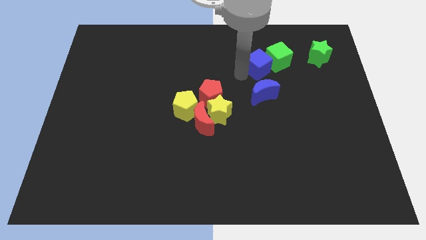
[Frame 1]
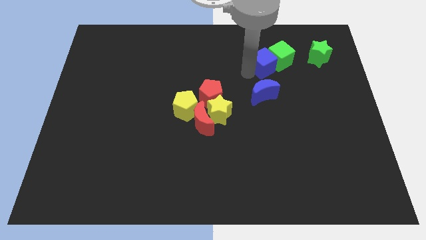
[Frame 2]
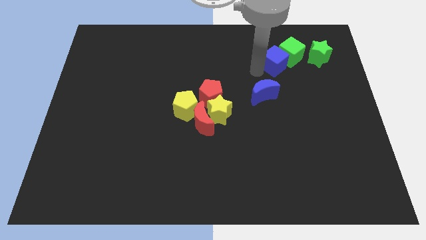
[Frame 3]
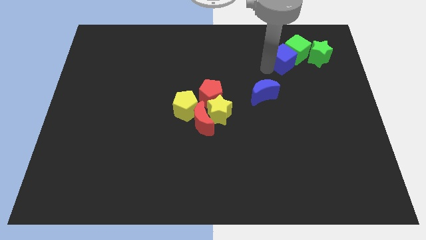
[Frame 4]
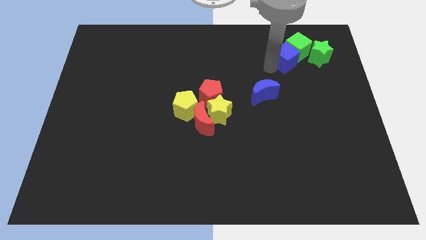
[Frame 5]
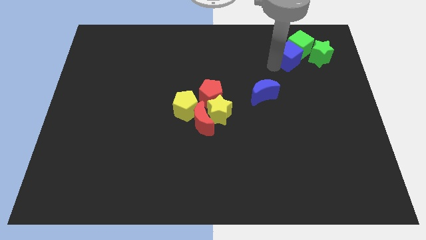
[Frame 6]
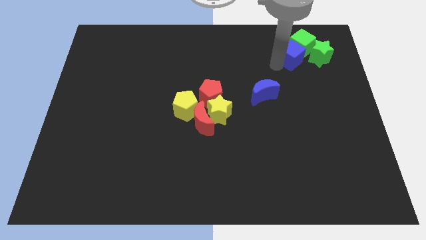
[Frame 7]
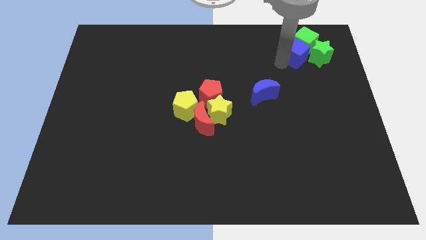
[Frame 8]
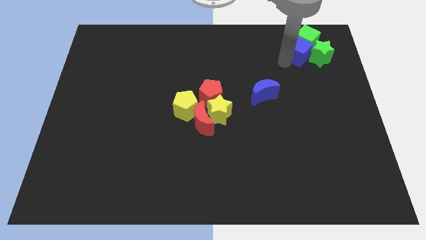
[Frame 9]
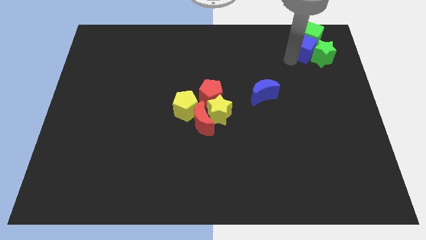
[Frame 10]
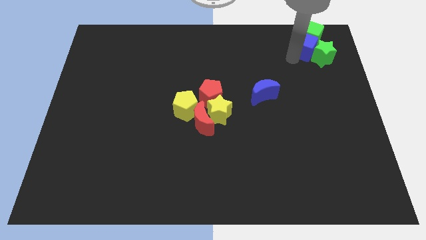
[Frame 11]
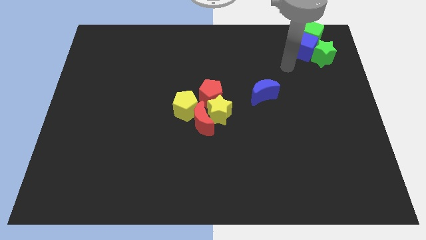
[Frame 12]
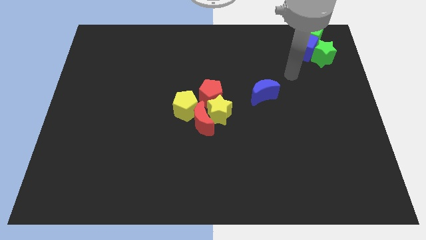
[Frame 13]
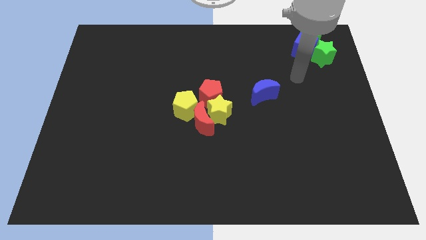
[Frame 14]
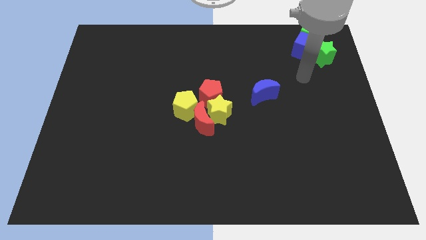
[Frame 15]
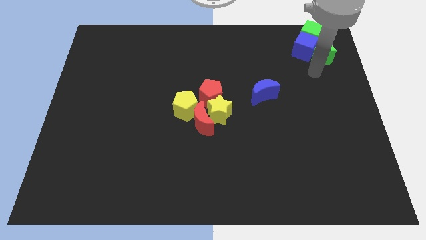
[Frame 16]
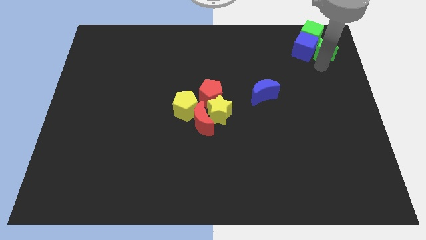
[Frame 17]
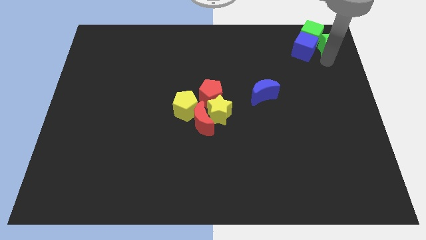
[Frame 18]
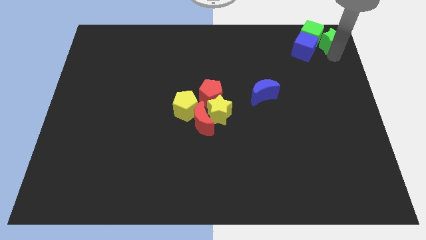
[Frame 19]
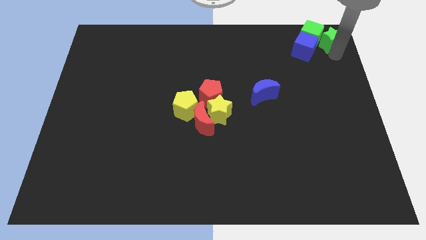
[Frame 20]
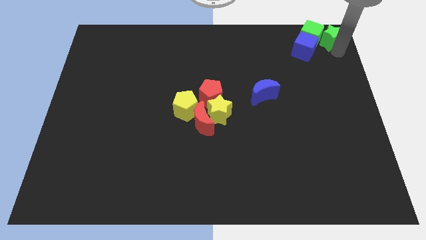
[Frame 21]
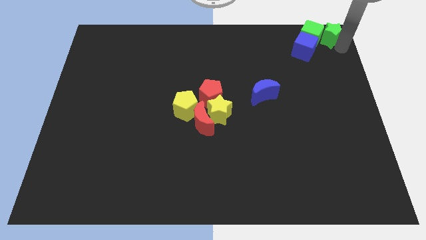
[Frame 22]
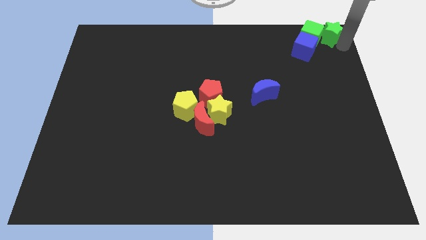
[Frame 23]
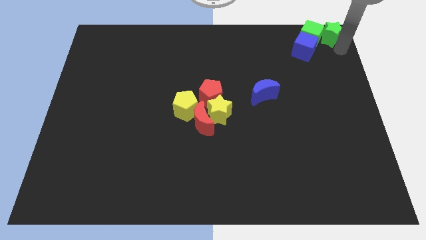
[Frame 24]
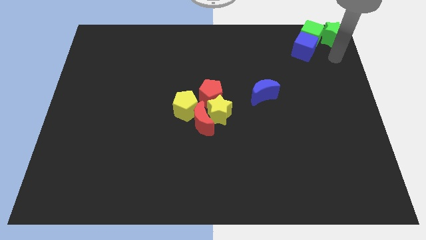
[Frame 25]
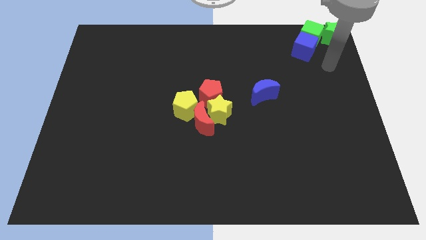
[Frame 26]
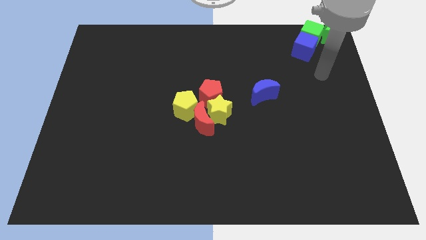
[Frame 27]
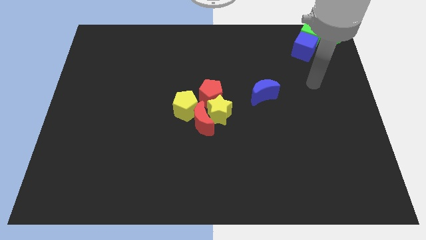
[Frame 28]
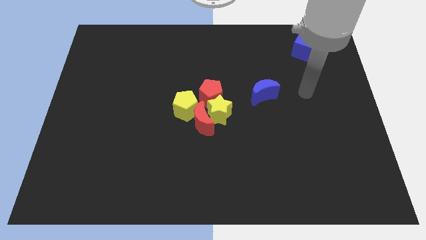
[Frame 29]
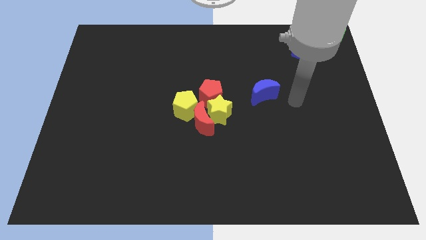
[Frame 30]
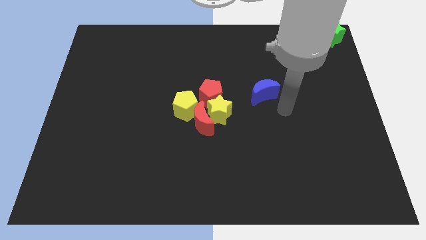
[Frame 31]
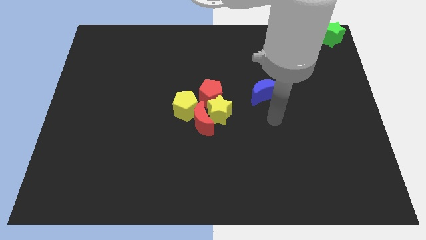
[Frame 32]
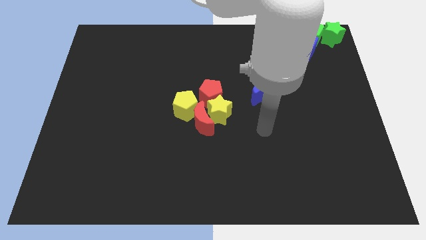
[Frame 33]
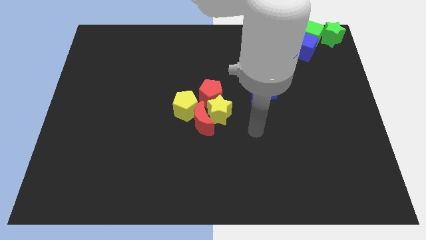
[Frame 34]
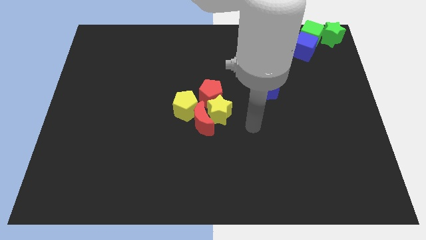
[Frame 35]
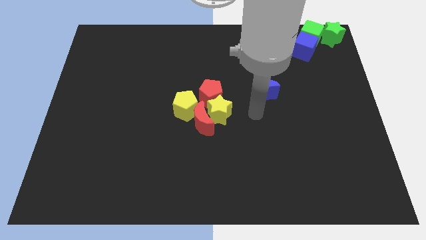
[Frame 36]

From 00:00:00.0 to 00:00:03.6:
move the green star to the right side of the green cube

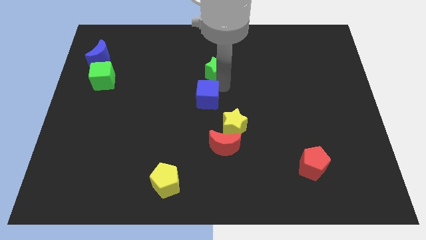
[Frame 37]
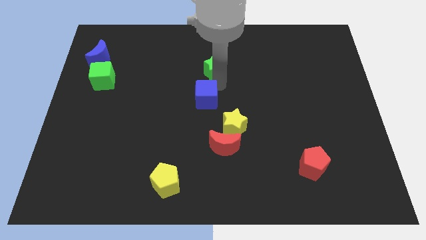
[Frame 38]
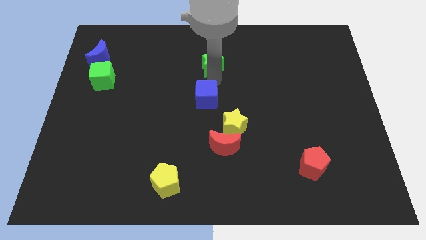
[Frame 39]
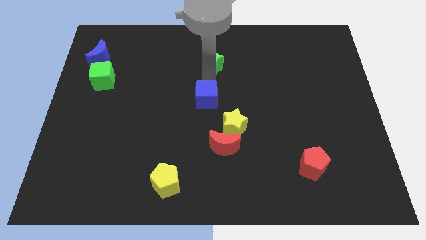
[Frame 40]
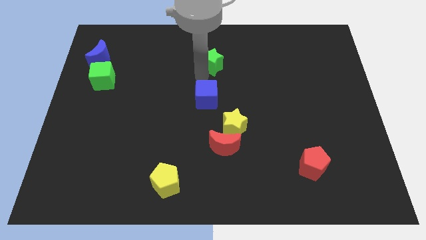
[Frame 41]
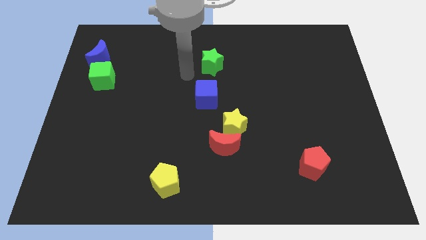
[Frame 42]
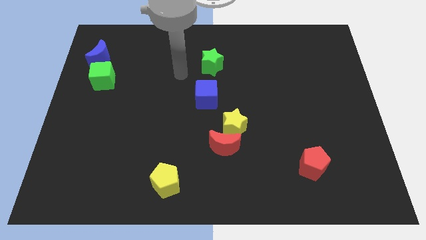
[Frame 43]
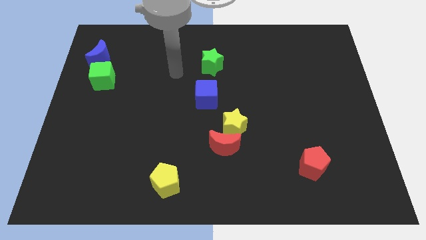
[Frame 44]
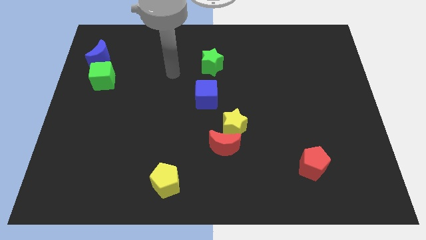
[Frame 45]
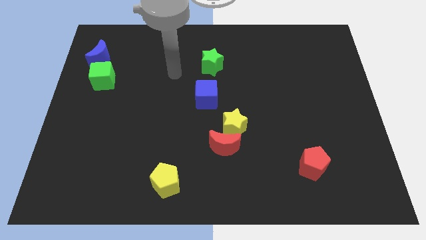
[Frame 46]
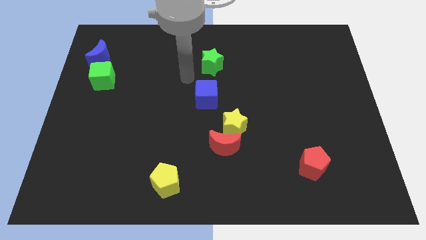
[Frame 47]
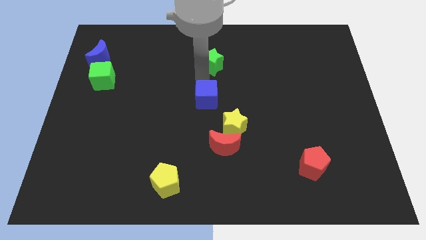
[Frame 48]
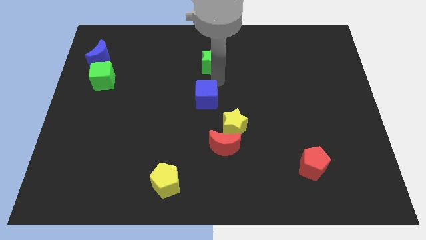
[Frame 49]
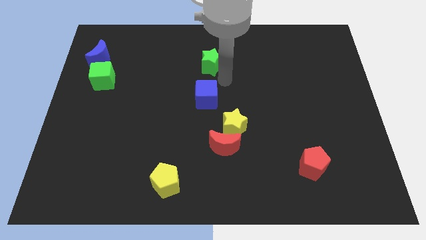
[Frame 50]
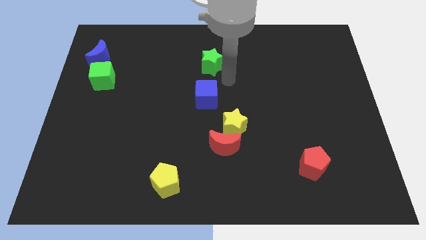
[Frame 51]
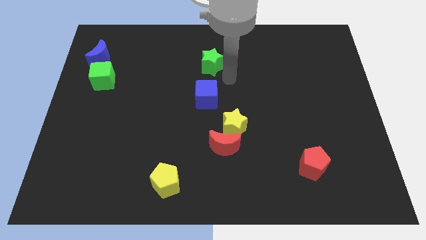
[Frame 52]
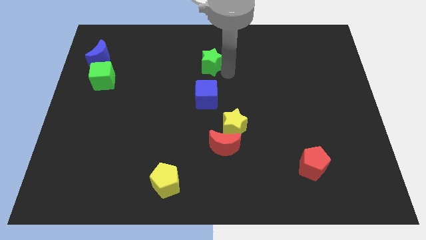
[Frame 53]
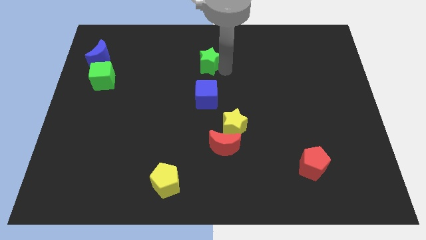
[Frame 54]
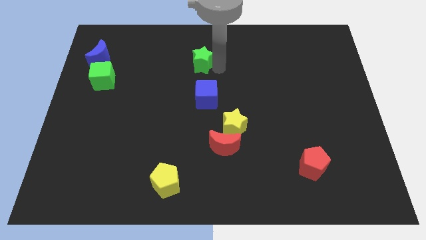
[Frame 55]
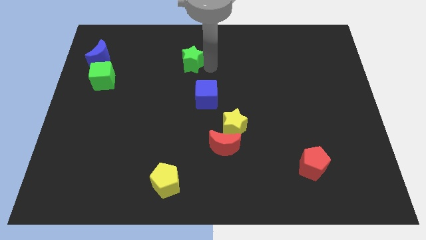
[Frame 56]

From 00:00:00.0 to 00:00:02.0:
separate blue cube and green star

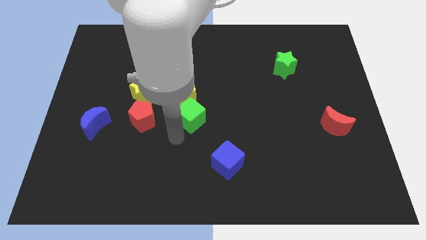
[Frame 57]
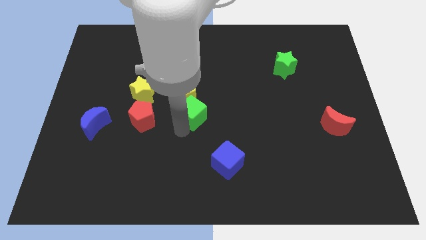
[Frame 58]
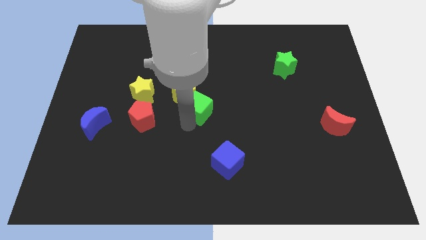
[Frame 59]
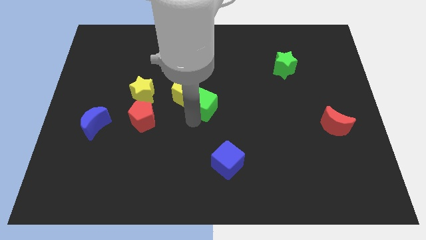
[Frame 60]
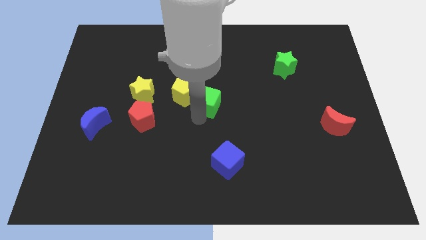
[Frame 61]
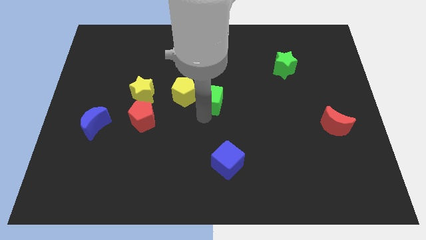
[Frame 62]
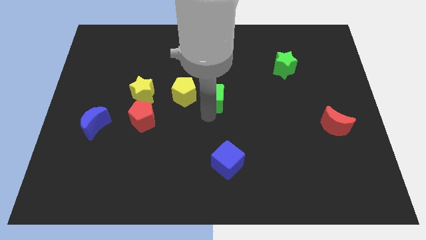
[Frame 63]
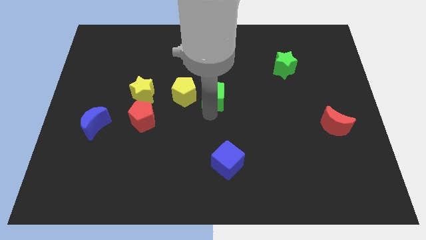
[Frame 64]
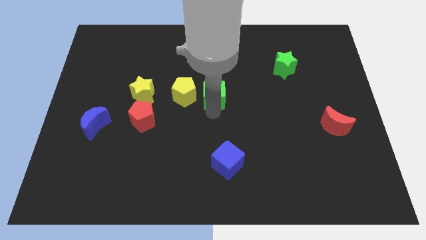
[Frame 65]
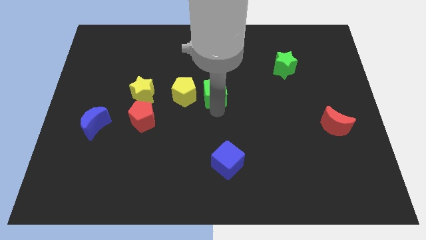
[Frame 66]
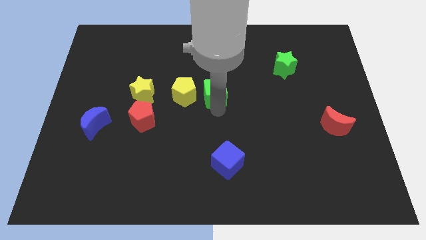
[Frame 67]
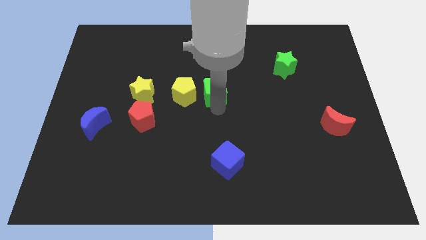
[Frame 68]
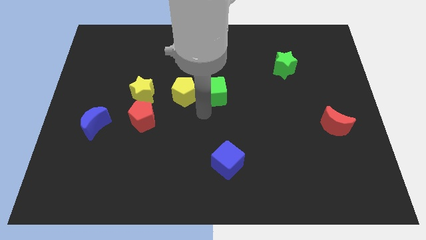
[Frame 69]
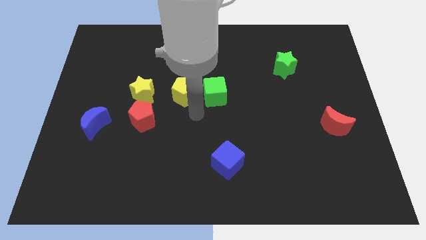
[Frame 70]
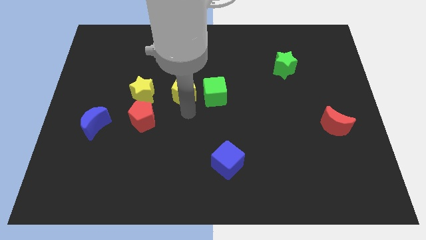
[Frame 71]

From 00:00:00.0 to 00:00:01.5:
drag the green cube slightly upwards

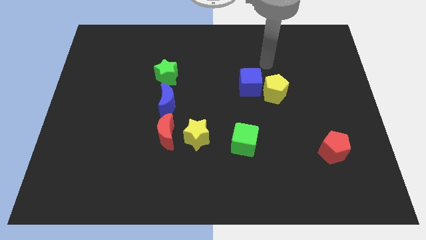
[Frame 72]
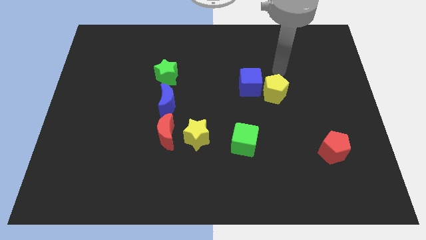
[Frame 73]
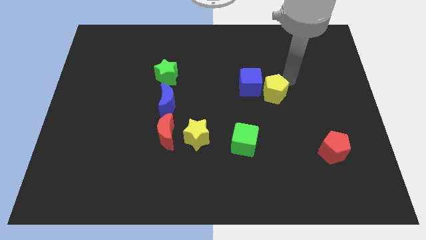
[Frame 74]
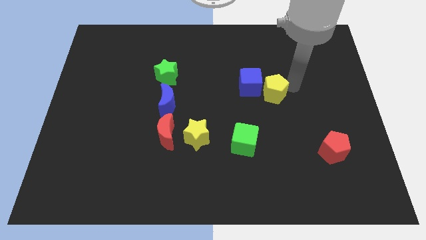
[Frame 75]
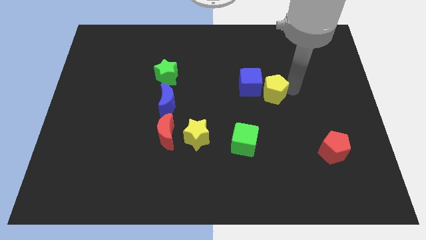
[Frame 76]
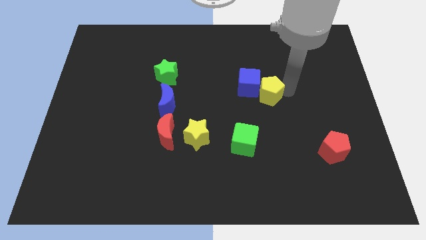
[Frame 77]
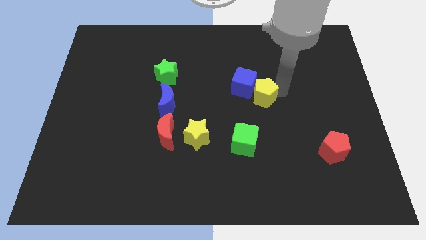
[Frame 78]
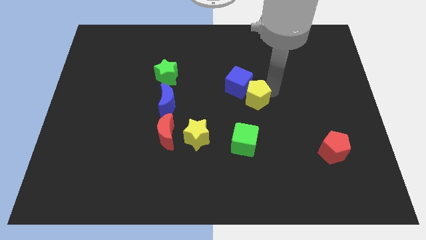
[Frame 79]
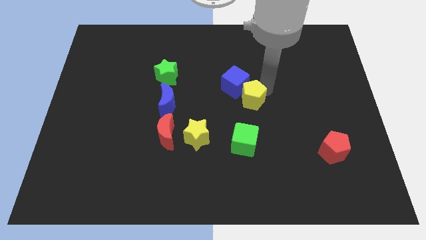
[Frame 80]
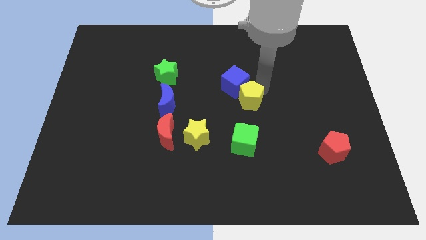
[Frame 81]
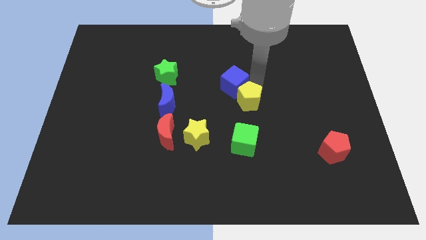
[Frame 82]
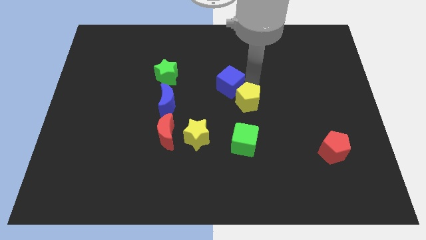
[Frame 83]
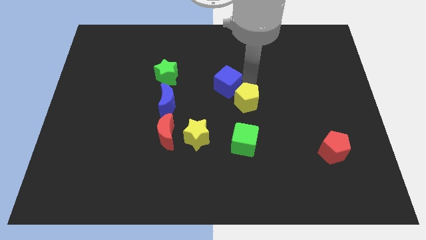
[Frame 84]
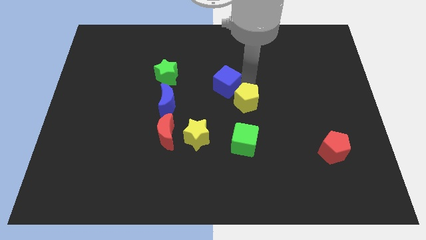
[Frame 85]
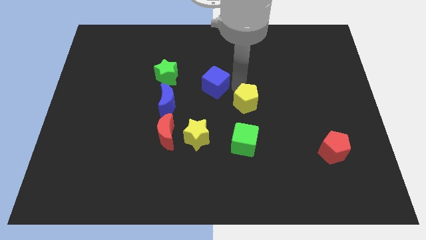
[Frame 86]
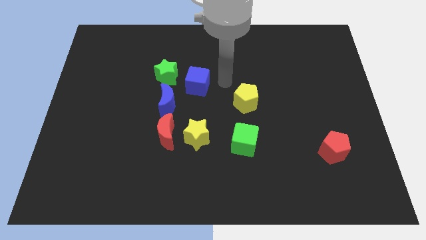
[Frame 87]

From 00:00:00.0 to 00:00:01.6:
separate the yellow pentagon from the blue cube

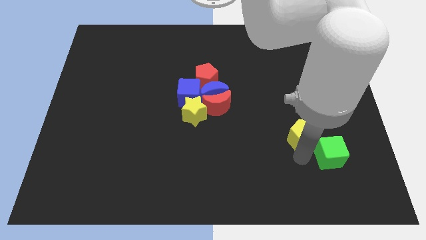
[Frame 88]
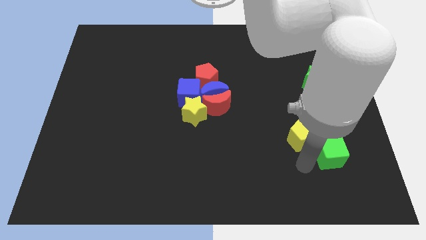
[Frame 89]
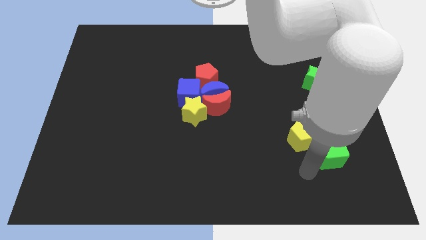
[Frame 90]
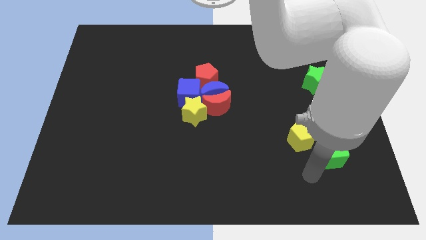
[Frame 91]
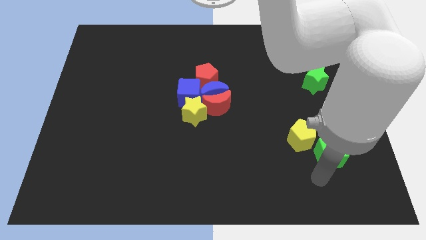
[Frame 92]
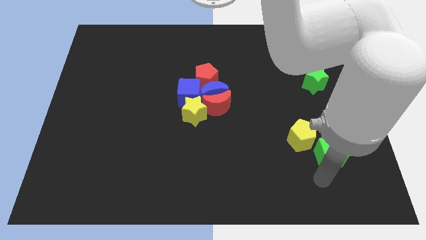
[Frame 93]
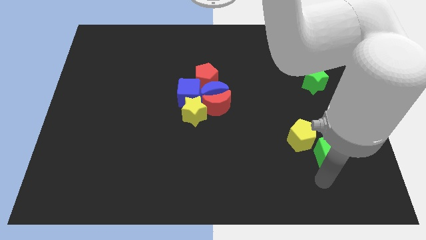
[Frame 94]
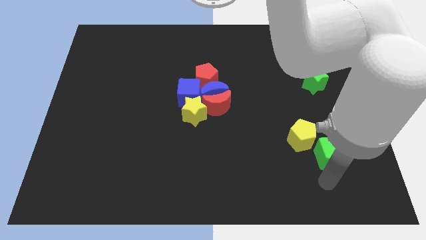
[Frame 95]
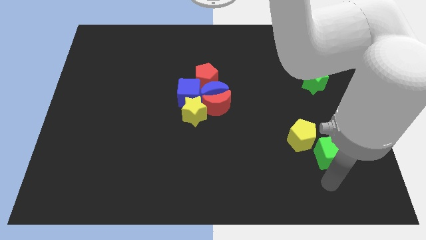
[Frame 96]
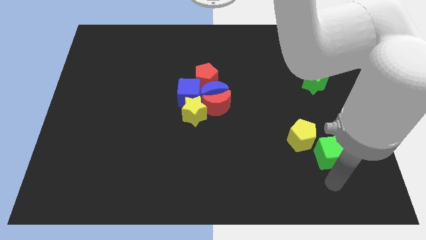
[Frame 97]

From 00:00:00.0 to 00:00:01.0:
go and point your hand below the green cube
